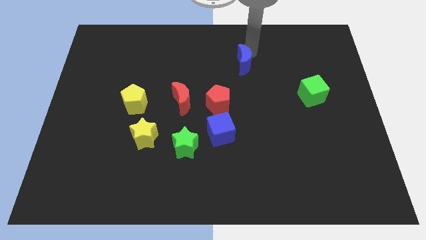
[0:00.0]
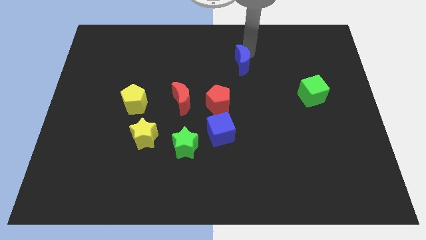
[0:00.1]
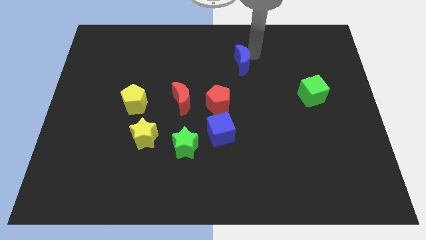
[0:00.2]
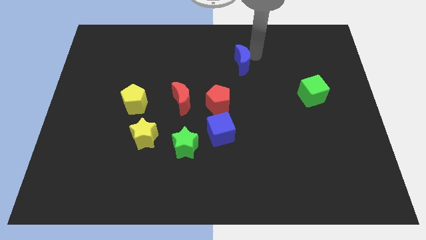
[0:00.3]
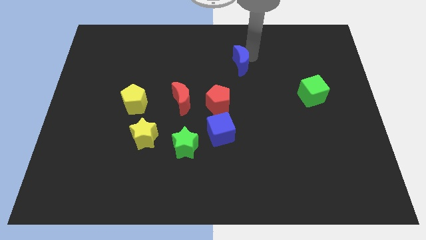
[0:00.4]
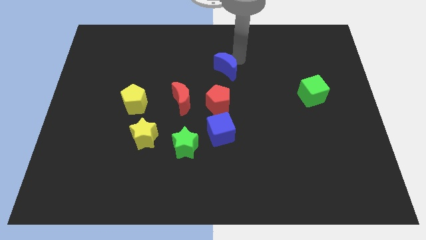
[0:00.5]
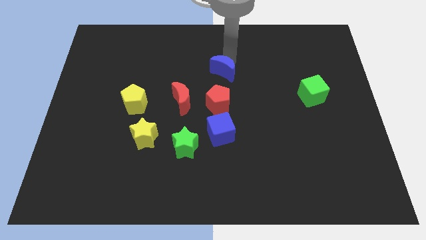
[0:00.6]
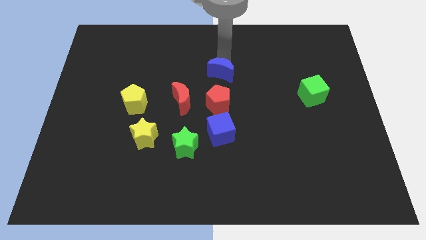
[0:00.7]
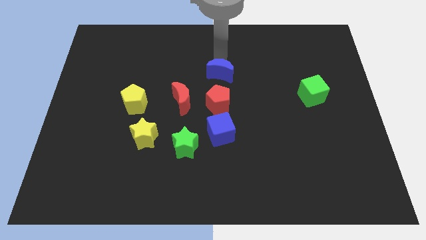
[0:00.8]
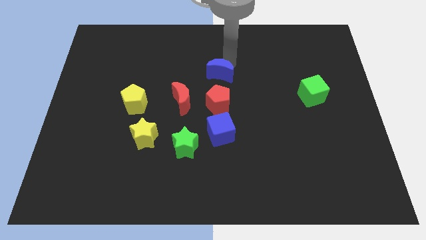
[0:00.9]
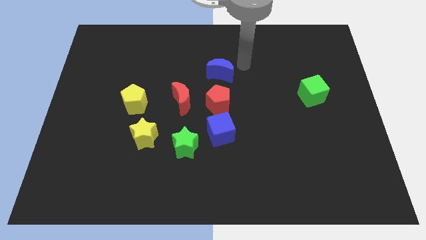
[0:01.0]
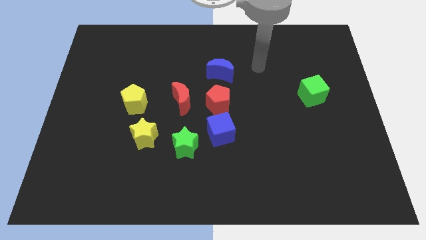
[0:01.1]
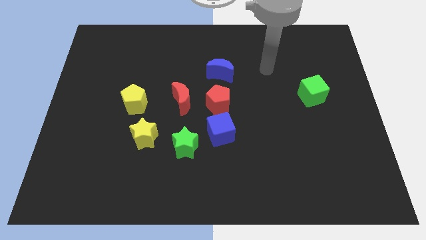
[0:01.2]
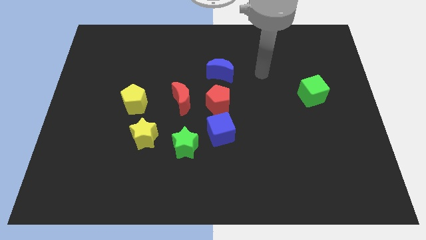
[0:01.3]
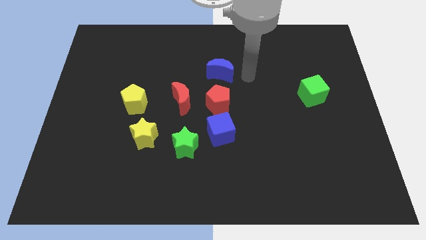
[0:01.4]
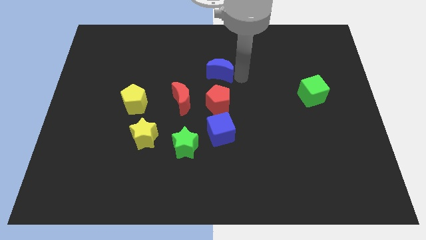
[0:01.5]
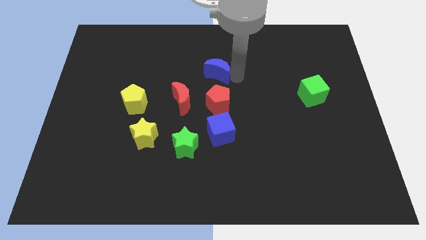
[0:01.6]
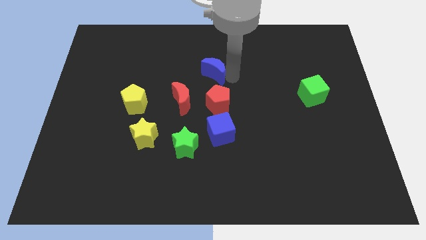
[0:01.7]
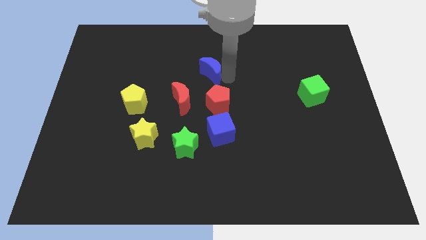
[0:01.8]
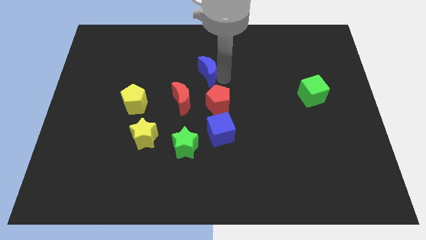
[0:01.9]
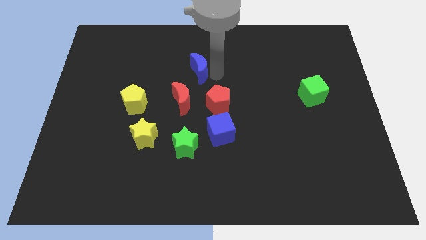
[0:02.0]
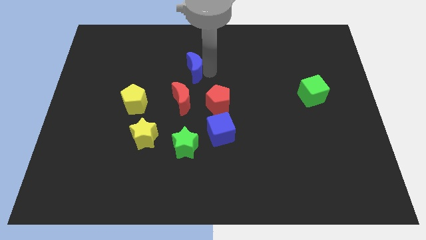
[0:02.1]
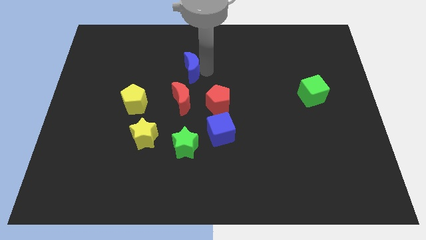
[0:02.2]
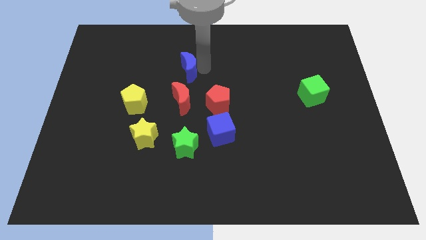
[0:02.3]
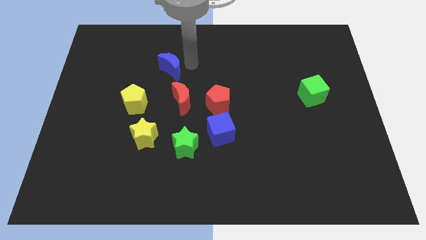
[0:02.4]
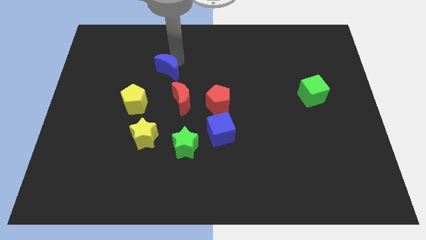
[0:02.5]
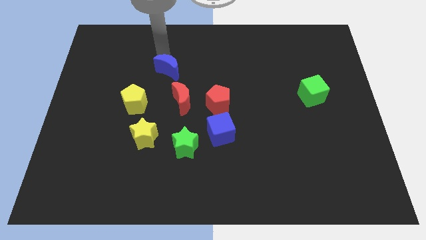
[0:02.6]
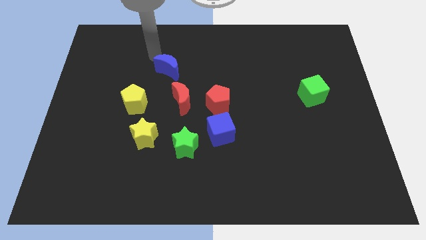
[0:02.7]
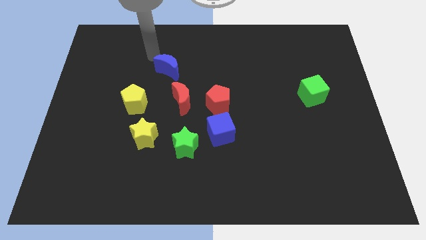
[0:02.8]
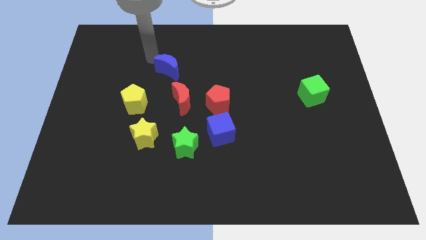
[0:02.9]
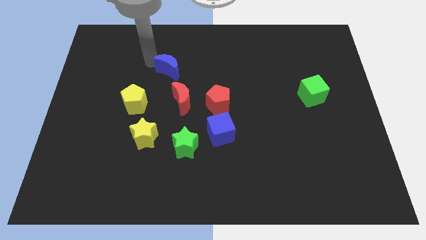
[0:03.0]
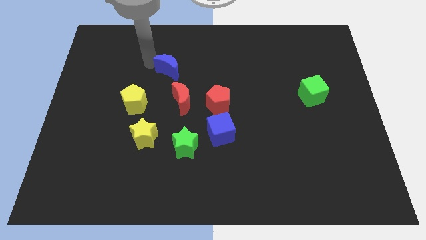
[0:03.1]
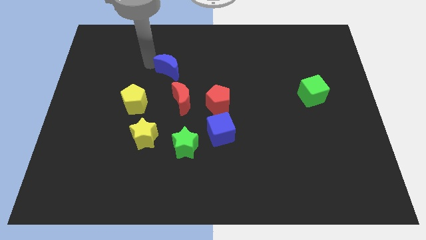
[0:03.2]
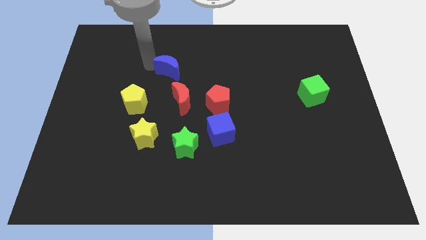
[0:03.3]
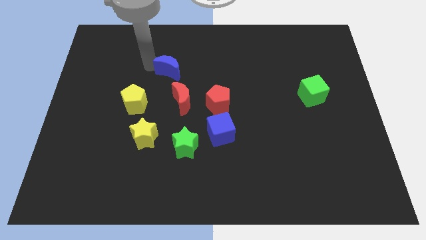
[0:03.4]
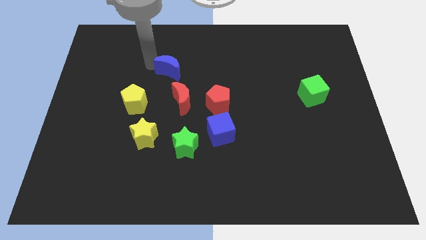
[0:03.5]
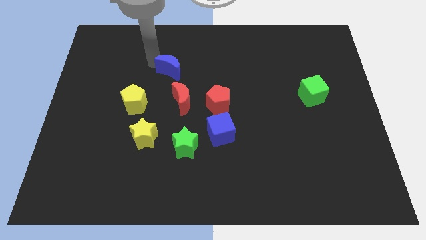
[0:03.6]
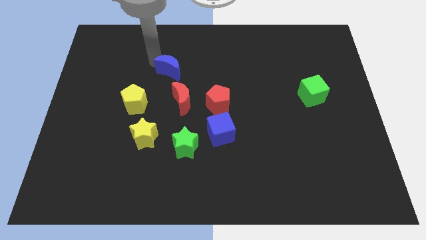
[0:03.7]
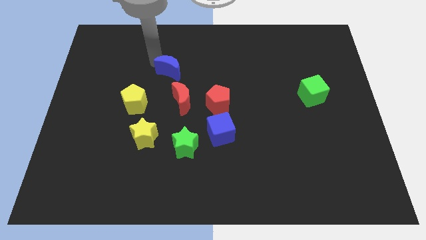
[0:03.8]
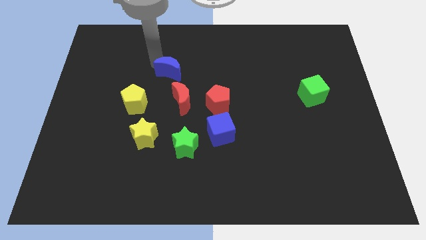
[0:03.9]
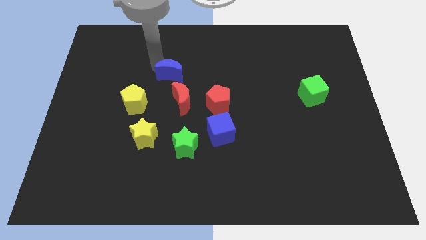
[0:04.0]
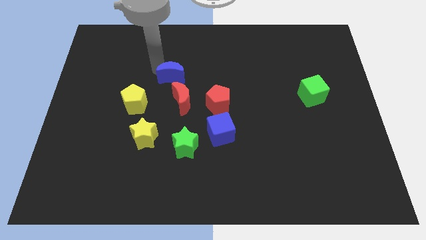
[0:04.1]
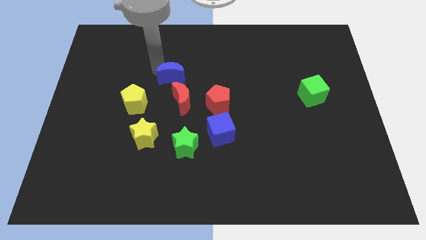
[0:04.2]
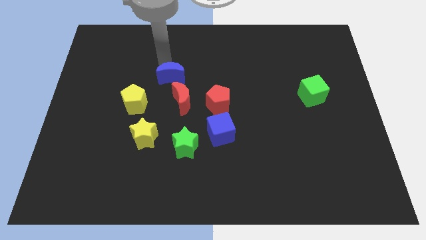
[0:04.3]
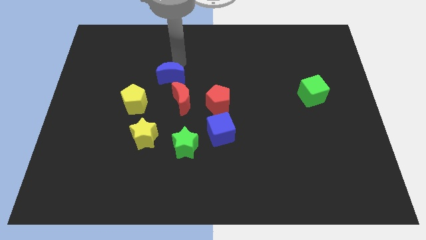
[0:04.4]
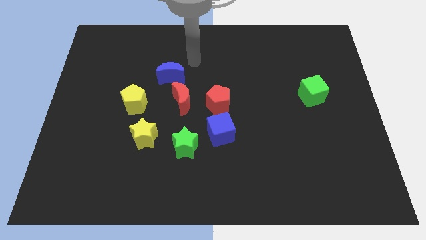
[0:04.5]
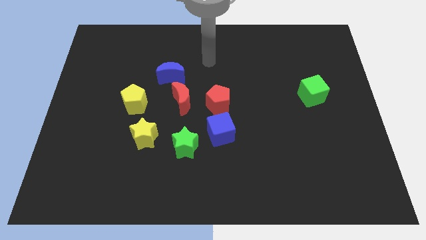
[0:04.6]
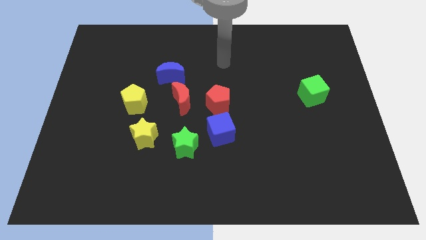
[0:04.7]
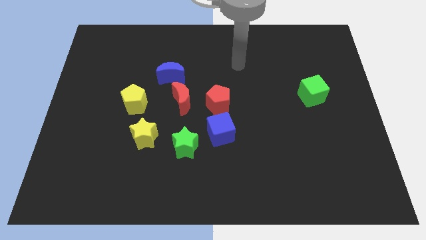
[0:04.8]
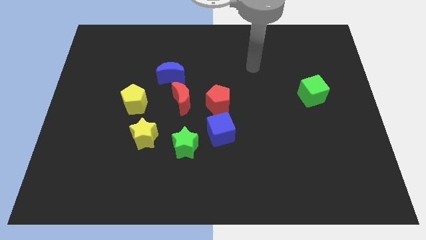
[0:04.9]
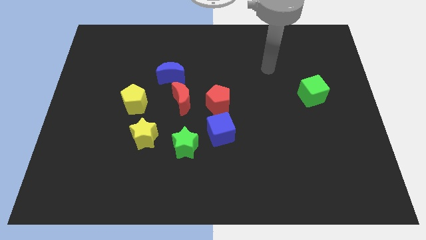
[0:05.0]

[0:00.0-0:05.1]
slide blue moon towards red moon

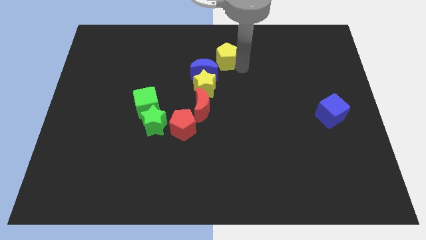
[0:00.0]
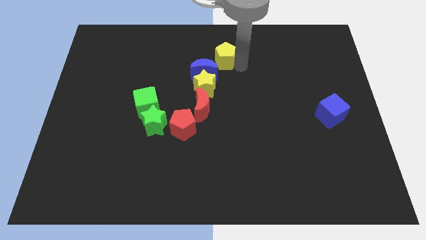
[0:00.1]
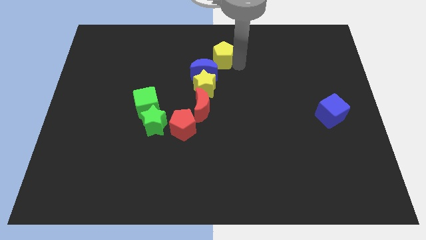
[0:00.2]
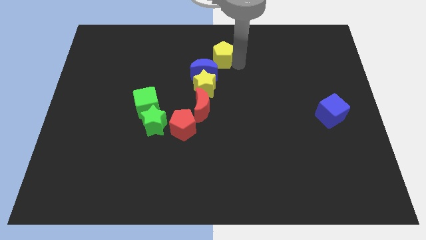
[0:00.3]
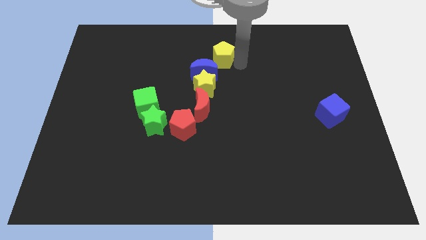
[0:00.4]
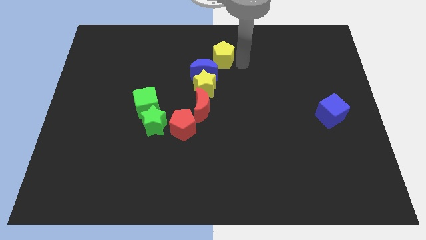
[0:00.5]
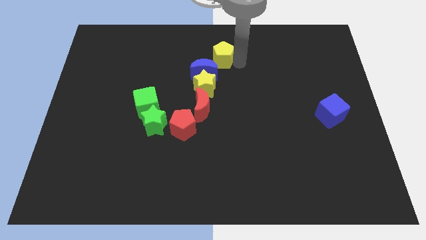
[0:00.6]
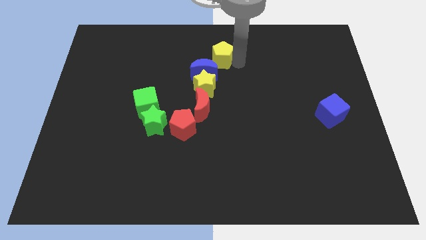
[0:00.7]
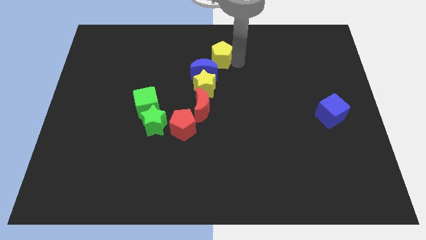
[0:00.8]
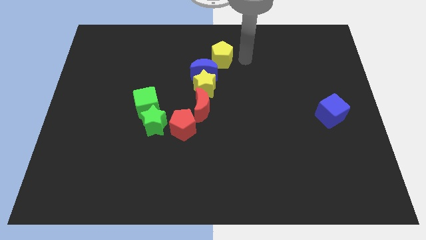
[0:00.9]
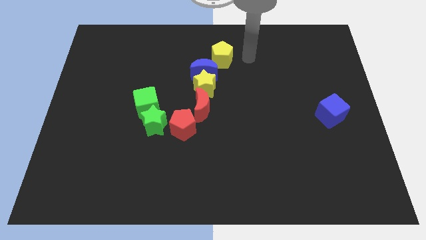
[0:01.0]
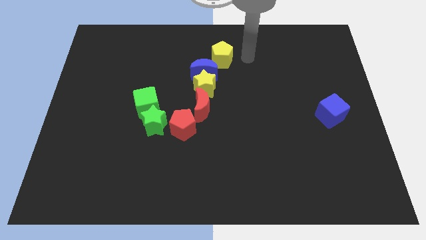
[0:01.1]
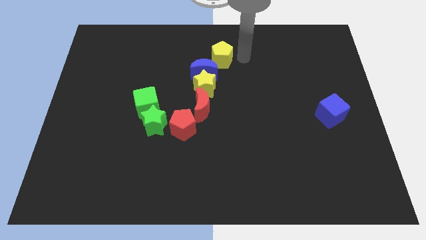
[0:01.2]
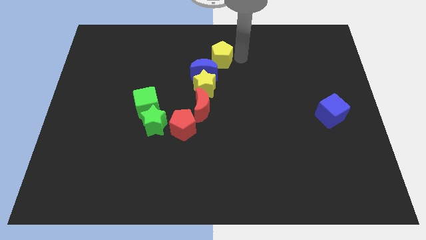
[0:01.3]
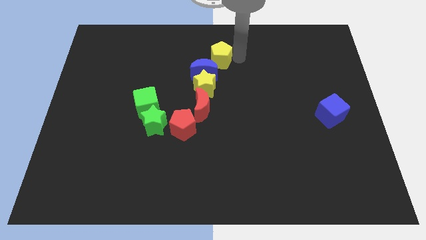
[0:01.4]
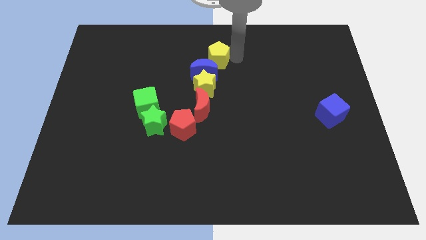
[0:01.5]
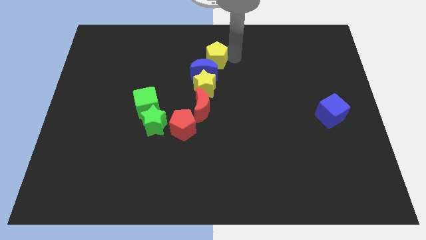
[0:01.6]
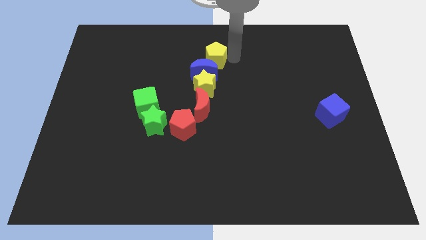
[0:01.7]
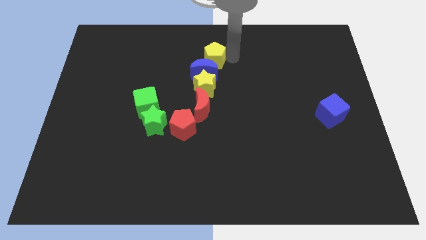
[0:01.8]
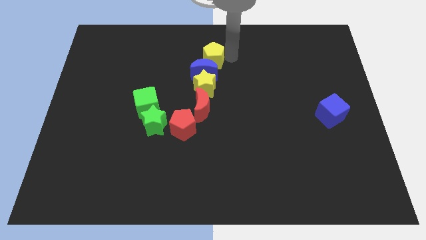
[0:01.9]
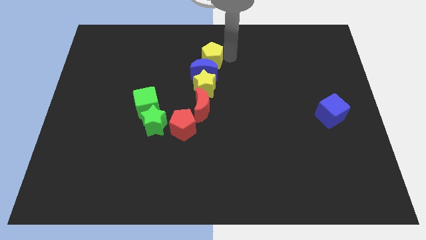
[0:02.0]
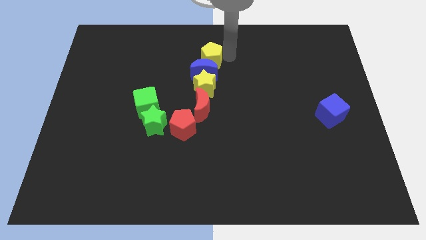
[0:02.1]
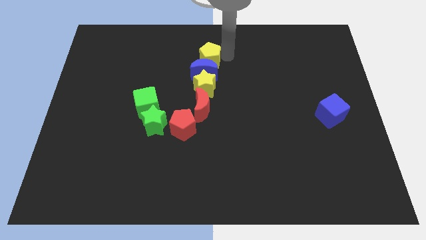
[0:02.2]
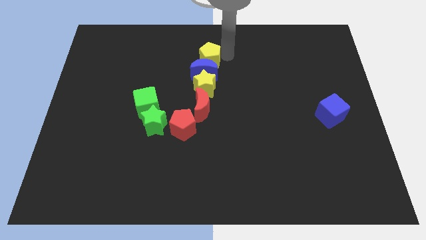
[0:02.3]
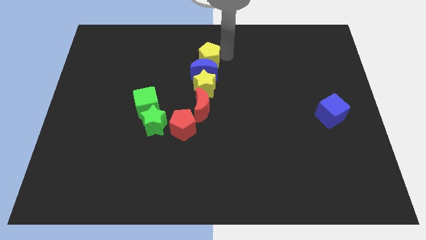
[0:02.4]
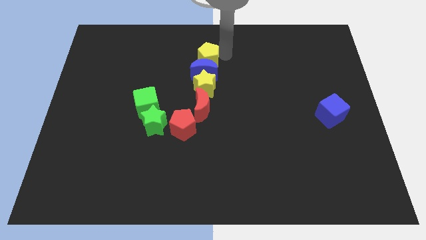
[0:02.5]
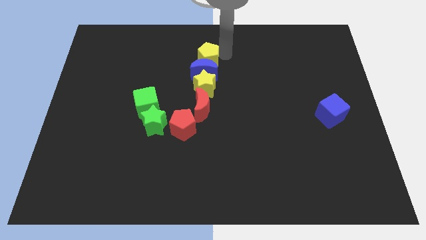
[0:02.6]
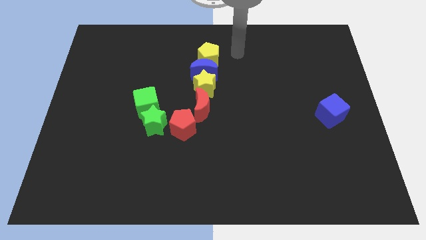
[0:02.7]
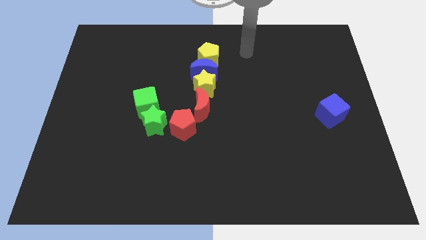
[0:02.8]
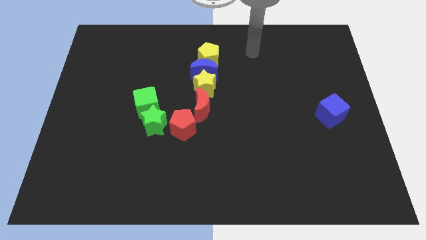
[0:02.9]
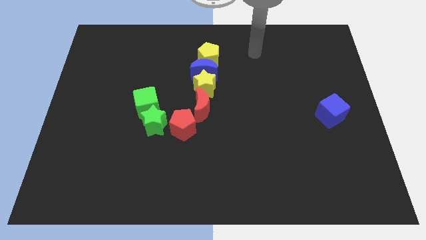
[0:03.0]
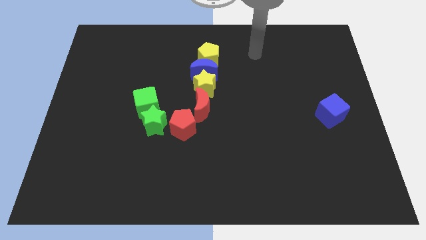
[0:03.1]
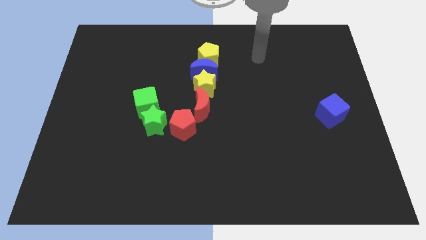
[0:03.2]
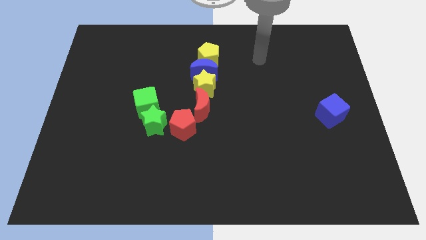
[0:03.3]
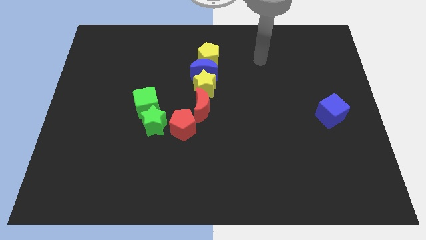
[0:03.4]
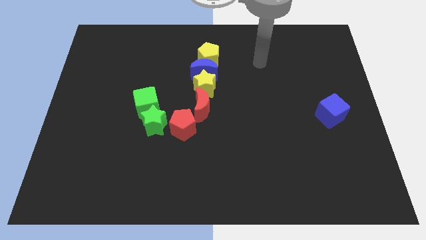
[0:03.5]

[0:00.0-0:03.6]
move the yellow pentagon to the top of the blue moon

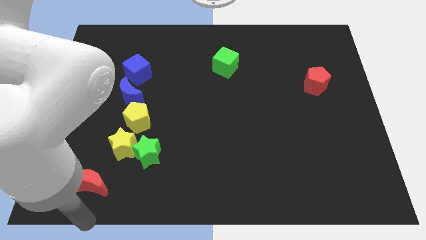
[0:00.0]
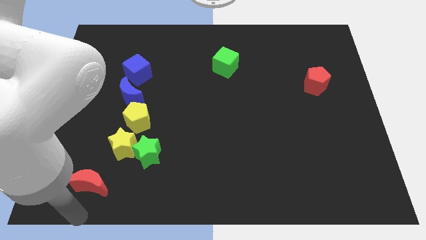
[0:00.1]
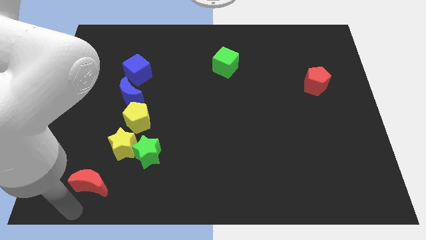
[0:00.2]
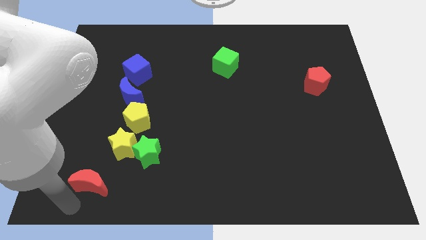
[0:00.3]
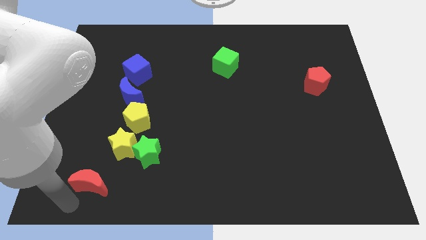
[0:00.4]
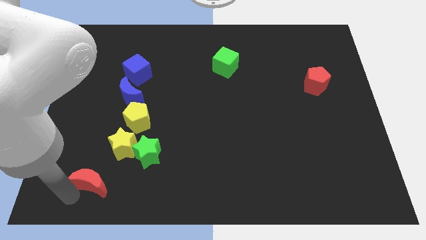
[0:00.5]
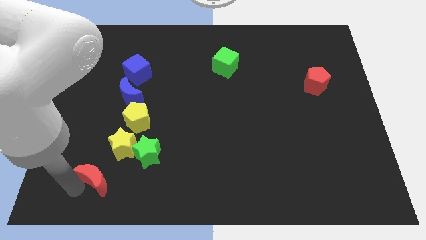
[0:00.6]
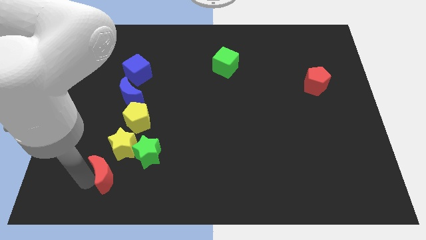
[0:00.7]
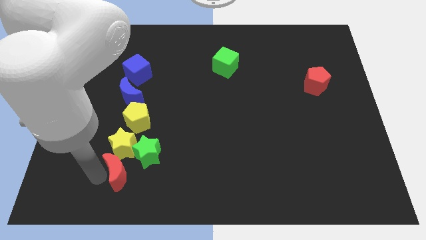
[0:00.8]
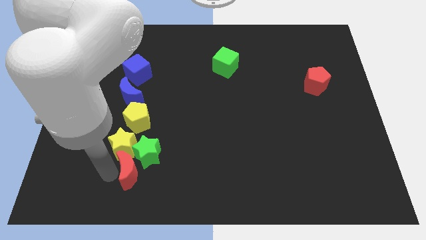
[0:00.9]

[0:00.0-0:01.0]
place the red crescent below the yellow star
